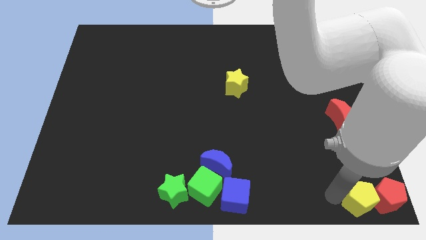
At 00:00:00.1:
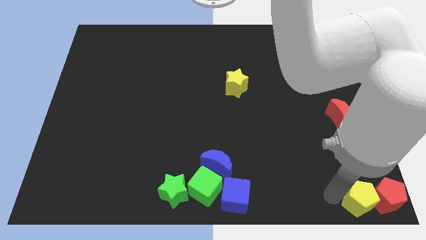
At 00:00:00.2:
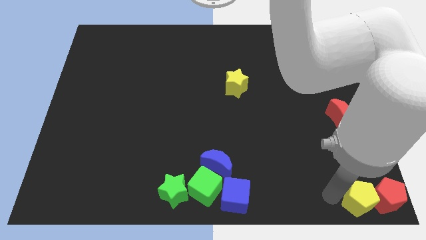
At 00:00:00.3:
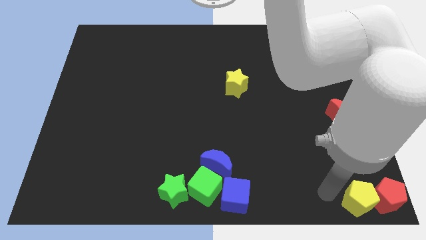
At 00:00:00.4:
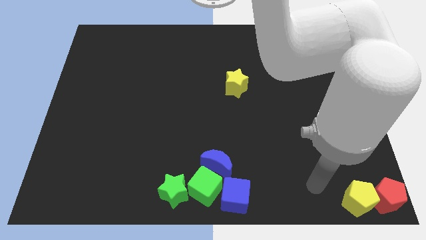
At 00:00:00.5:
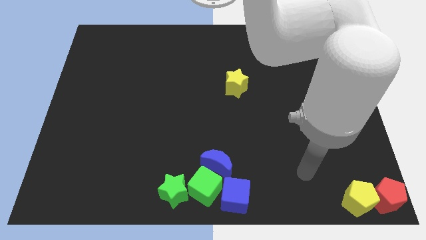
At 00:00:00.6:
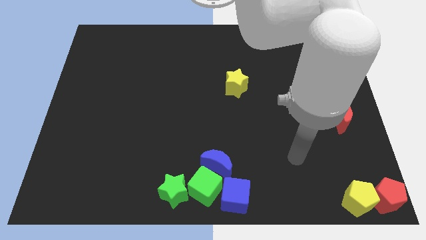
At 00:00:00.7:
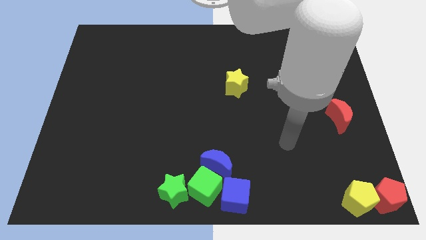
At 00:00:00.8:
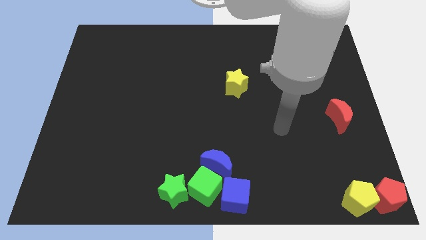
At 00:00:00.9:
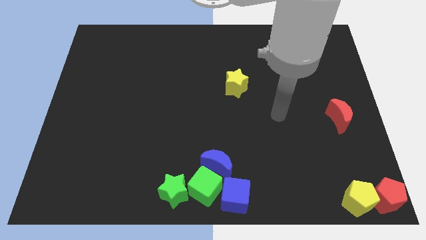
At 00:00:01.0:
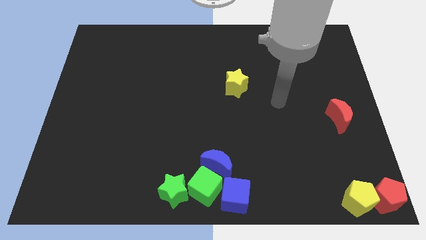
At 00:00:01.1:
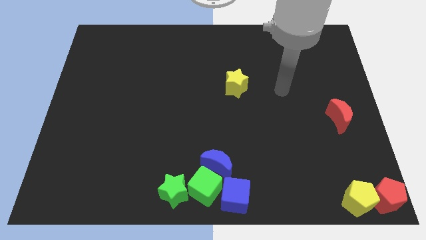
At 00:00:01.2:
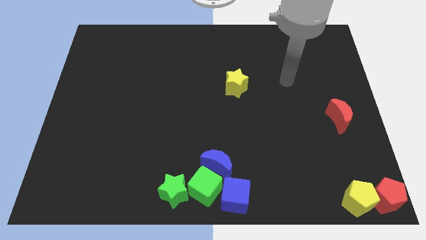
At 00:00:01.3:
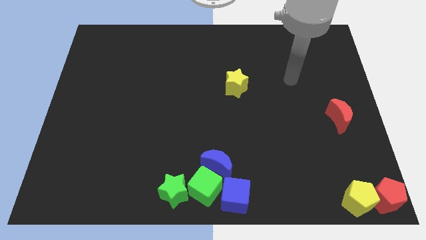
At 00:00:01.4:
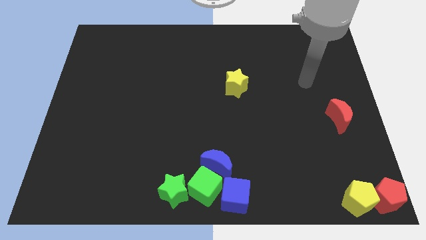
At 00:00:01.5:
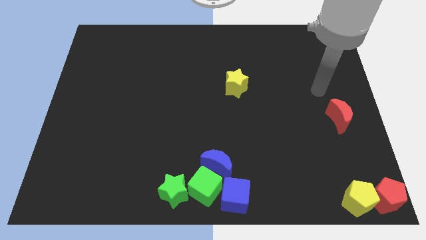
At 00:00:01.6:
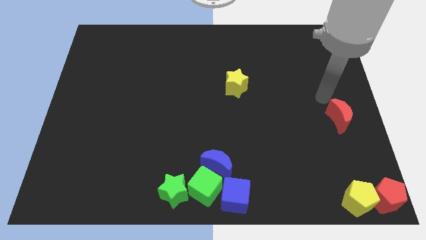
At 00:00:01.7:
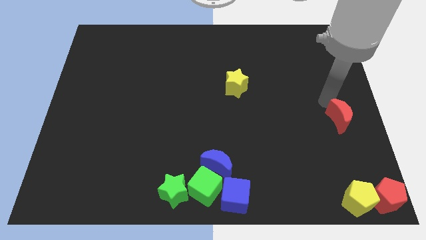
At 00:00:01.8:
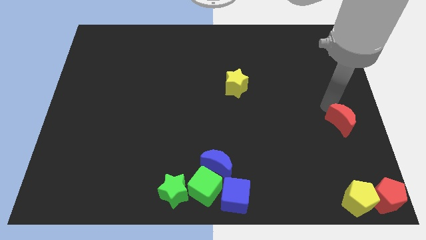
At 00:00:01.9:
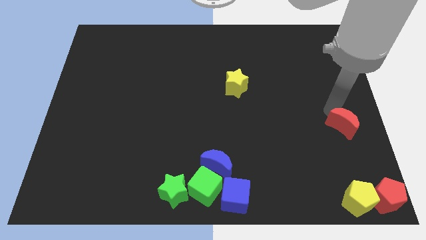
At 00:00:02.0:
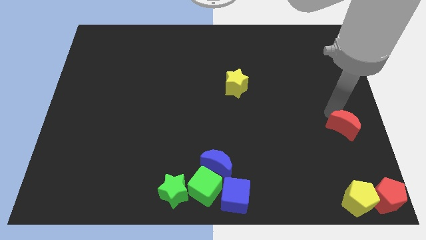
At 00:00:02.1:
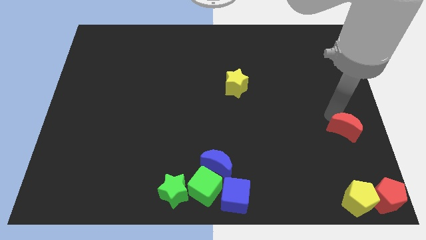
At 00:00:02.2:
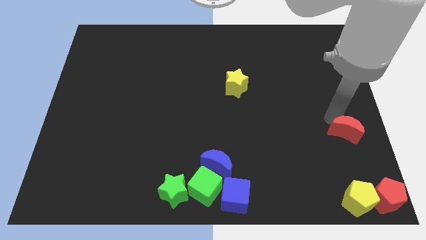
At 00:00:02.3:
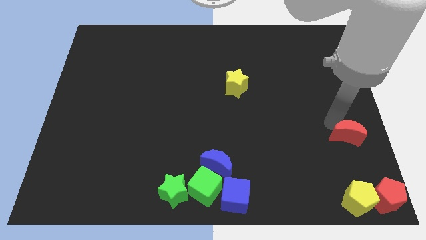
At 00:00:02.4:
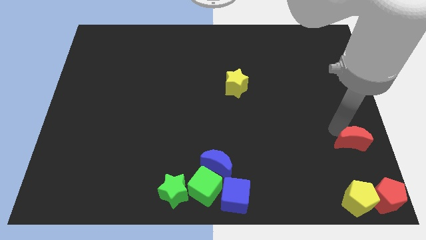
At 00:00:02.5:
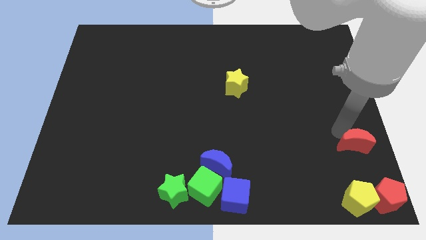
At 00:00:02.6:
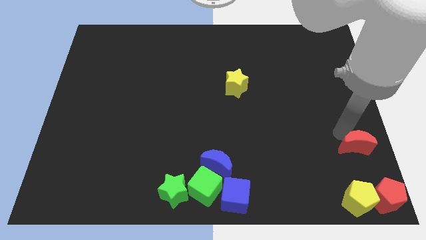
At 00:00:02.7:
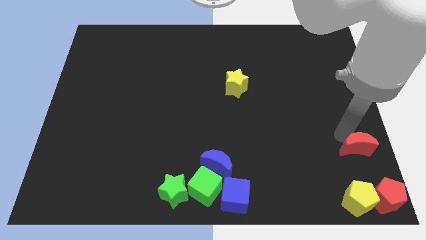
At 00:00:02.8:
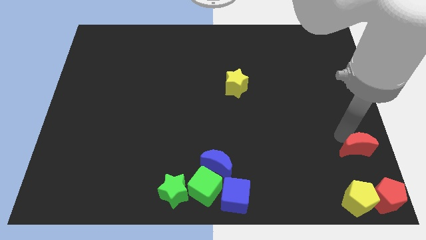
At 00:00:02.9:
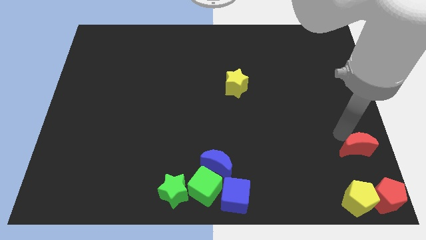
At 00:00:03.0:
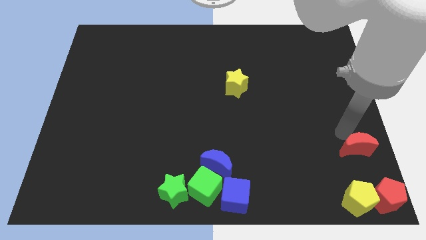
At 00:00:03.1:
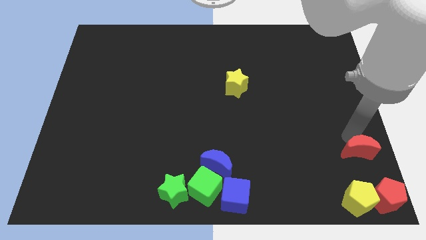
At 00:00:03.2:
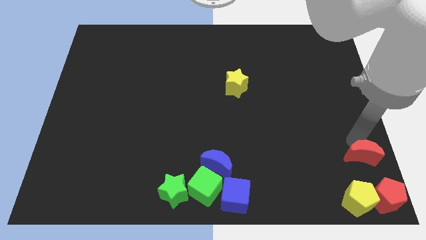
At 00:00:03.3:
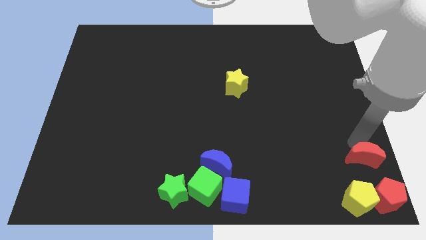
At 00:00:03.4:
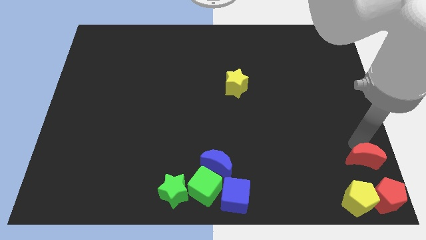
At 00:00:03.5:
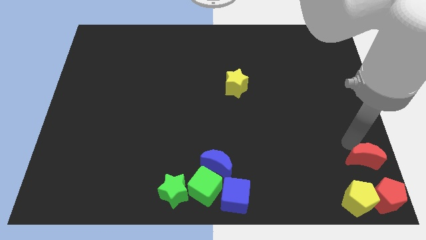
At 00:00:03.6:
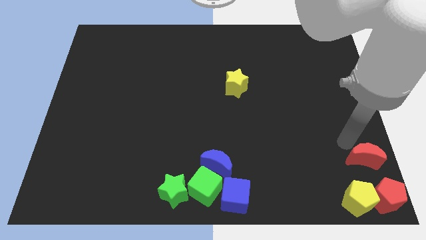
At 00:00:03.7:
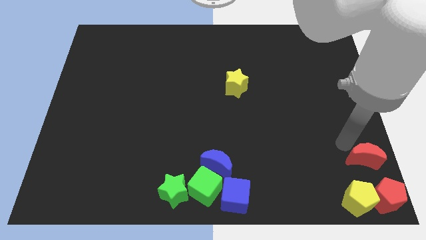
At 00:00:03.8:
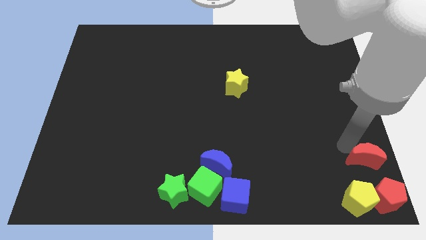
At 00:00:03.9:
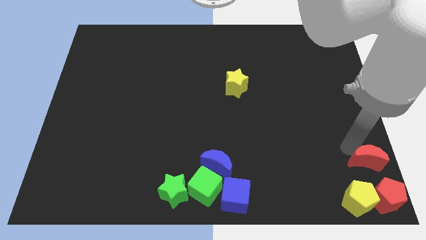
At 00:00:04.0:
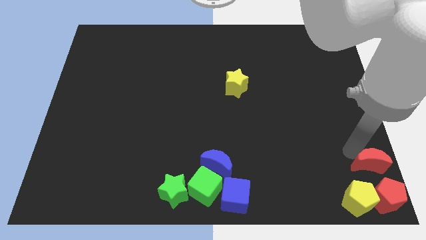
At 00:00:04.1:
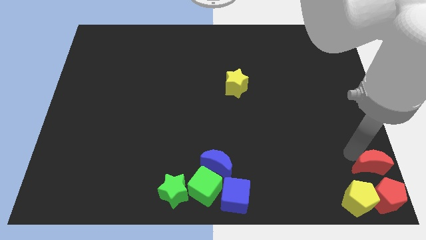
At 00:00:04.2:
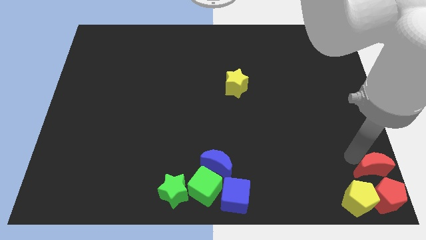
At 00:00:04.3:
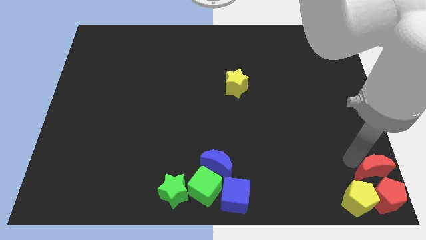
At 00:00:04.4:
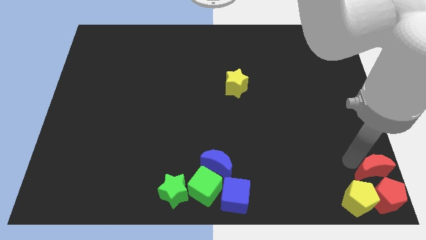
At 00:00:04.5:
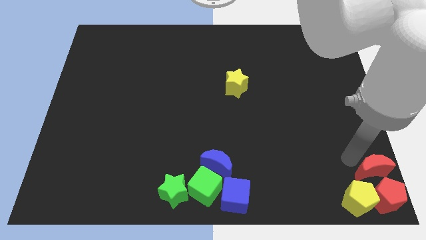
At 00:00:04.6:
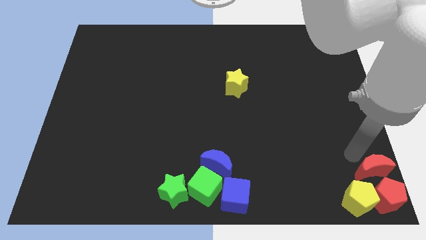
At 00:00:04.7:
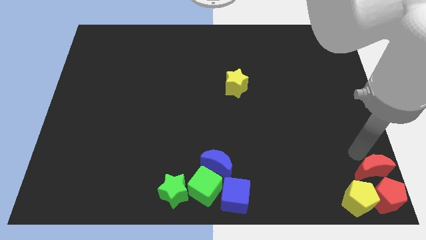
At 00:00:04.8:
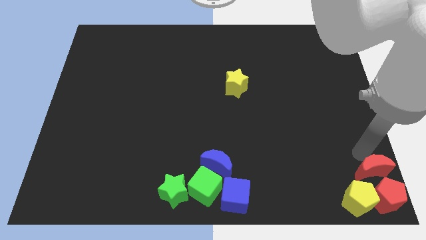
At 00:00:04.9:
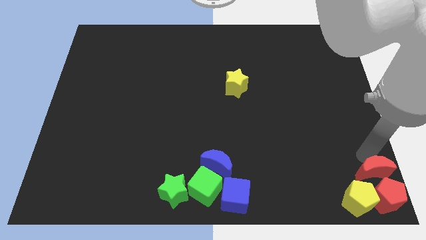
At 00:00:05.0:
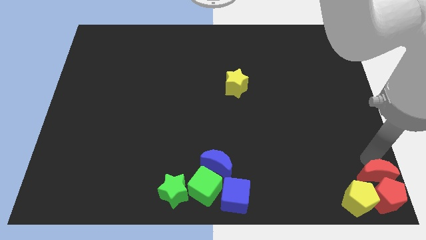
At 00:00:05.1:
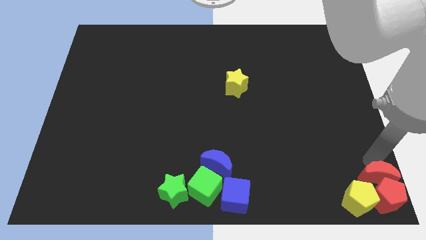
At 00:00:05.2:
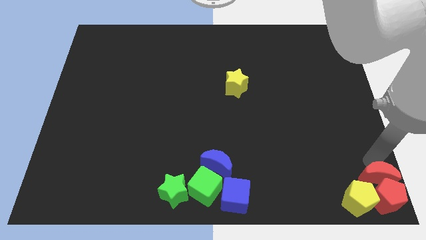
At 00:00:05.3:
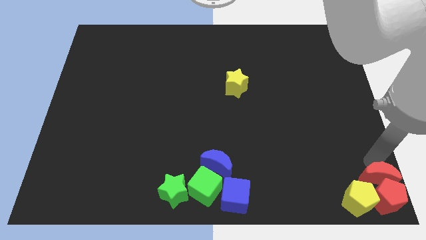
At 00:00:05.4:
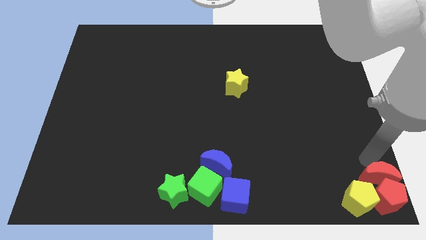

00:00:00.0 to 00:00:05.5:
push the red crescent into the group of blocks

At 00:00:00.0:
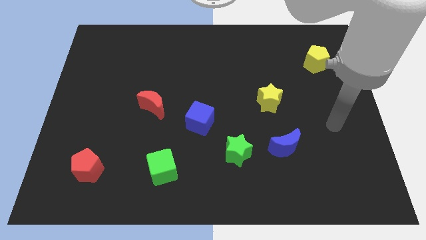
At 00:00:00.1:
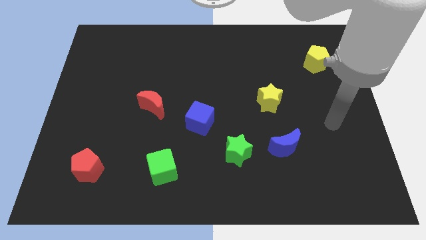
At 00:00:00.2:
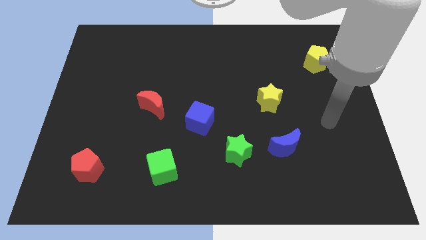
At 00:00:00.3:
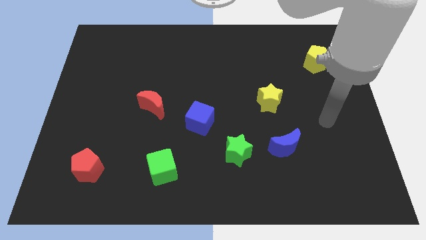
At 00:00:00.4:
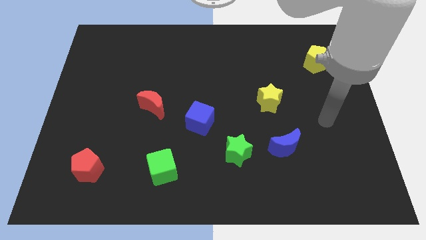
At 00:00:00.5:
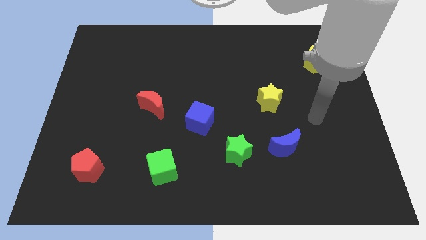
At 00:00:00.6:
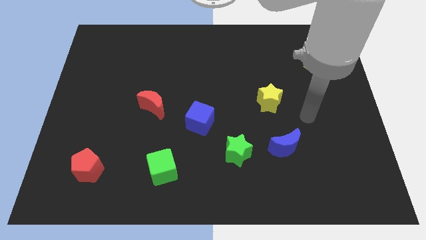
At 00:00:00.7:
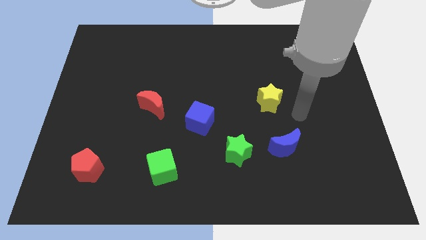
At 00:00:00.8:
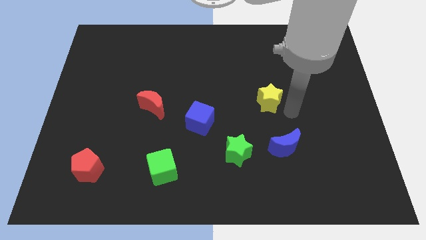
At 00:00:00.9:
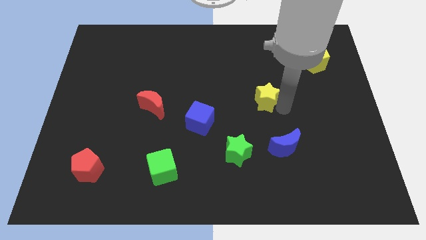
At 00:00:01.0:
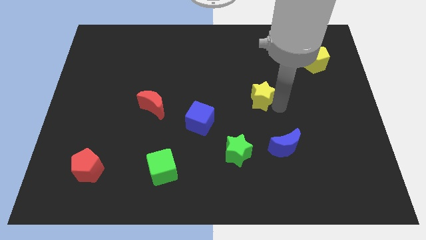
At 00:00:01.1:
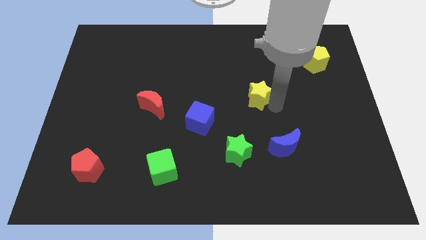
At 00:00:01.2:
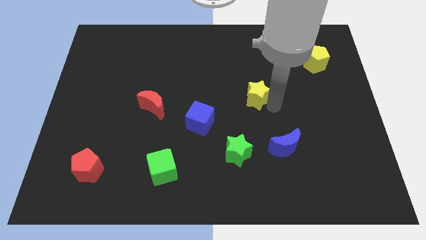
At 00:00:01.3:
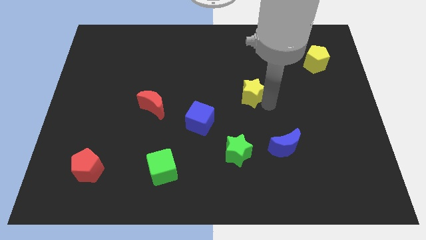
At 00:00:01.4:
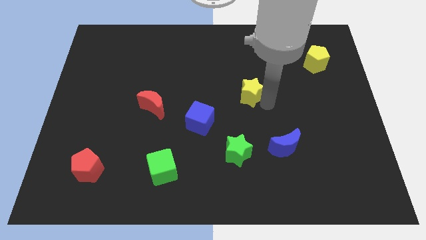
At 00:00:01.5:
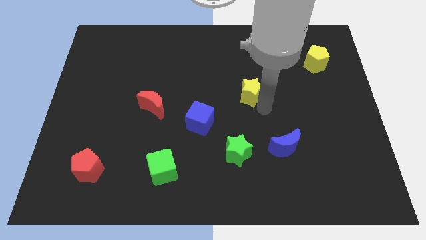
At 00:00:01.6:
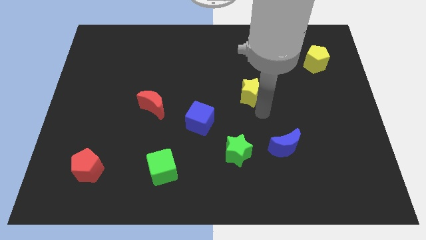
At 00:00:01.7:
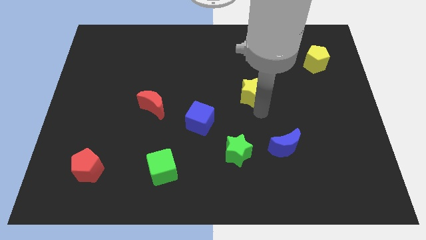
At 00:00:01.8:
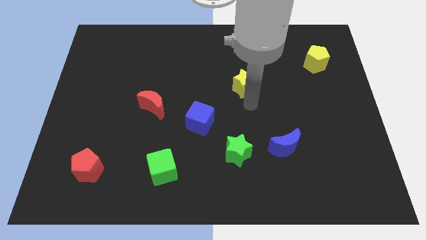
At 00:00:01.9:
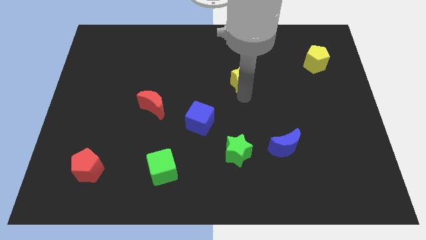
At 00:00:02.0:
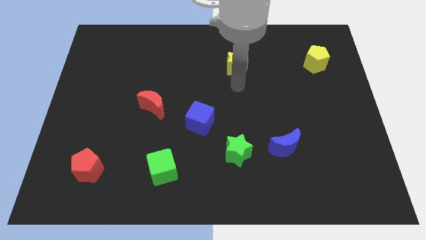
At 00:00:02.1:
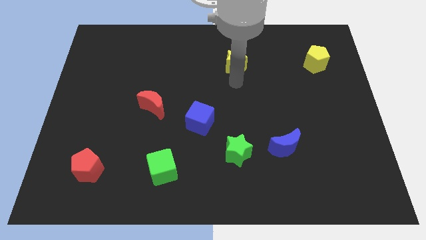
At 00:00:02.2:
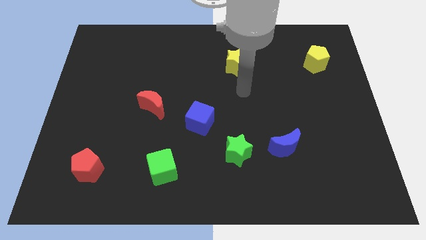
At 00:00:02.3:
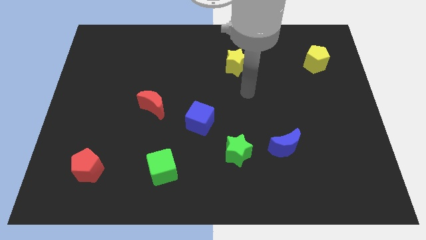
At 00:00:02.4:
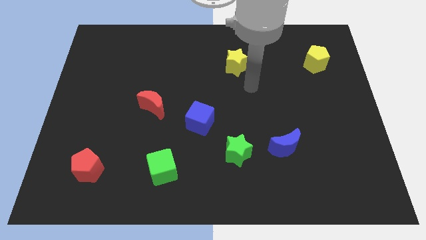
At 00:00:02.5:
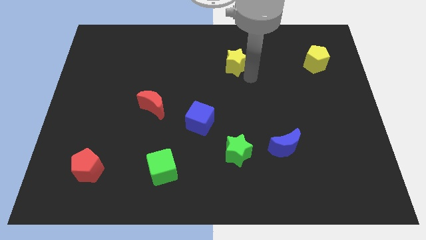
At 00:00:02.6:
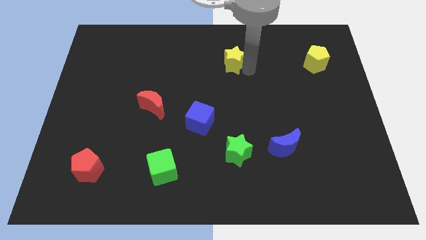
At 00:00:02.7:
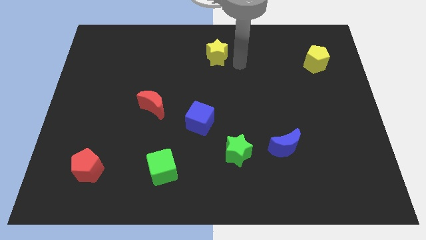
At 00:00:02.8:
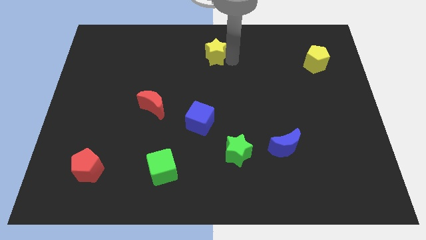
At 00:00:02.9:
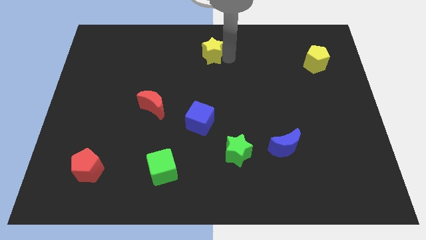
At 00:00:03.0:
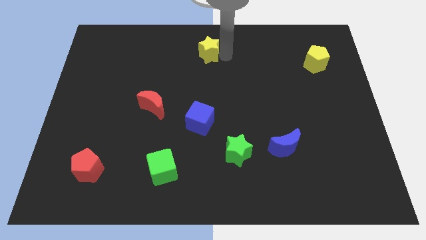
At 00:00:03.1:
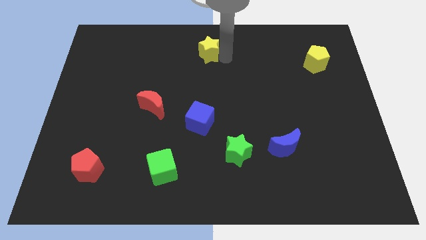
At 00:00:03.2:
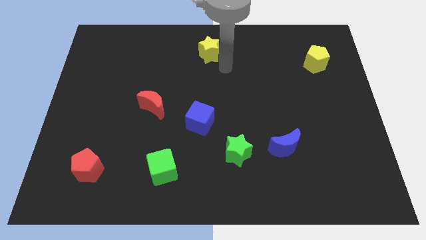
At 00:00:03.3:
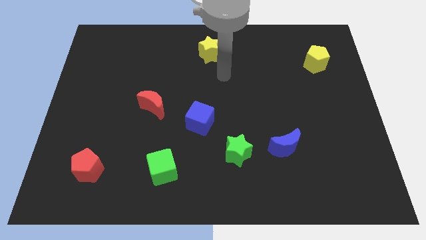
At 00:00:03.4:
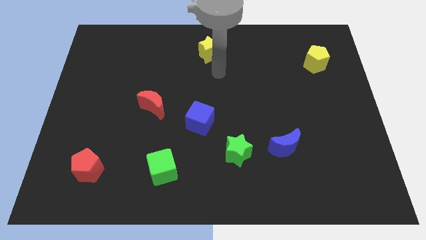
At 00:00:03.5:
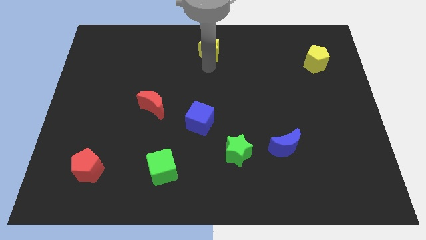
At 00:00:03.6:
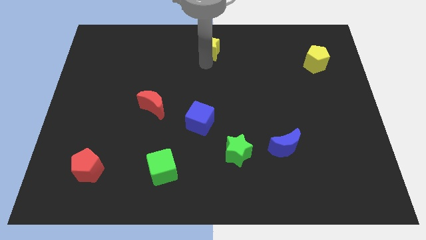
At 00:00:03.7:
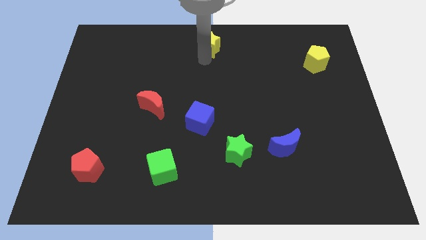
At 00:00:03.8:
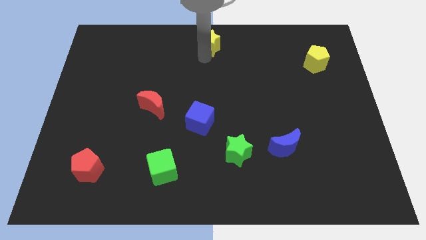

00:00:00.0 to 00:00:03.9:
move the yellow star to the top center of the board
